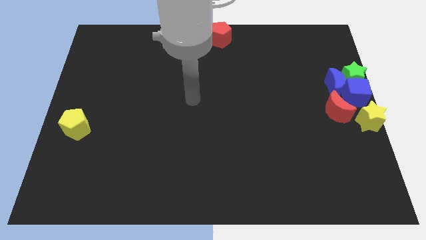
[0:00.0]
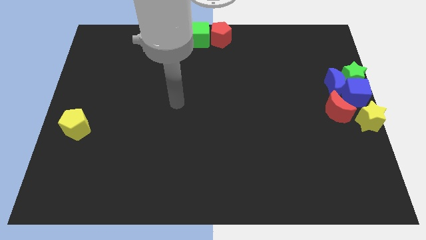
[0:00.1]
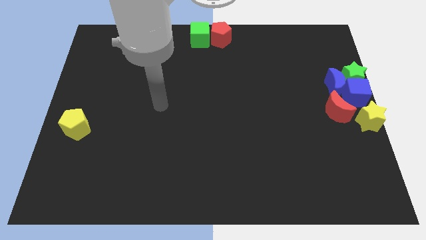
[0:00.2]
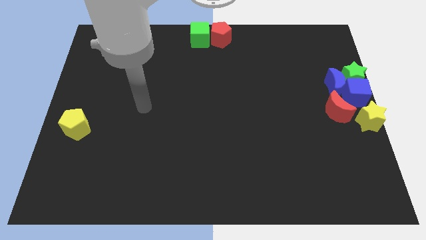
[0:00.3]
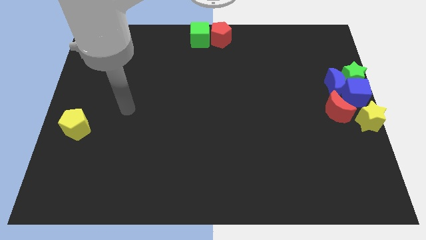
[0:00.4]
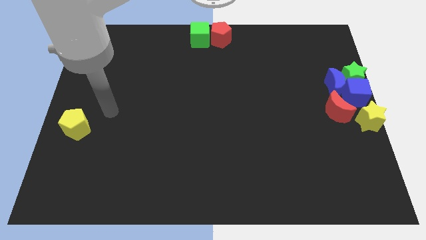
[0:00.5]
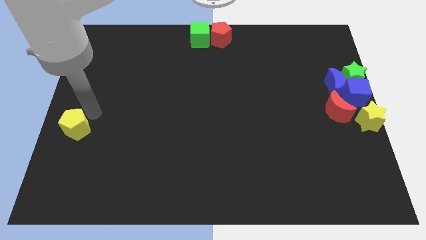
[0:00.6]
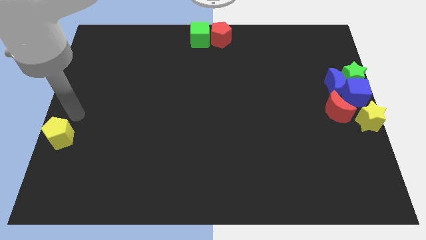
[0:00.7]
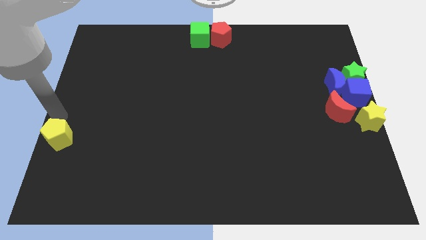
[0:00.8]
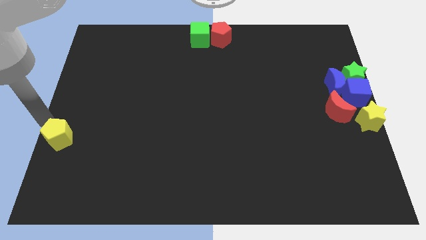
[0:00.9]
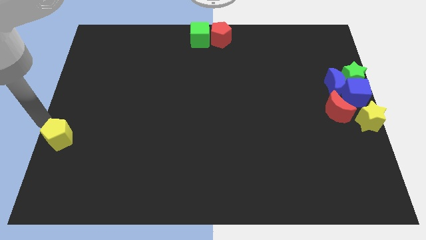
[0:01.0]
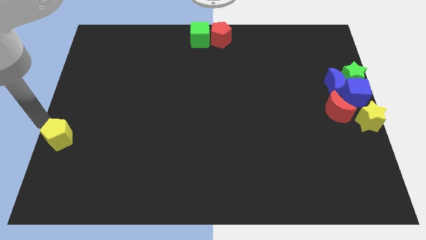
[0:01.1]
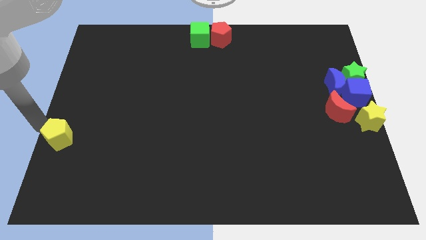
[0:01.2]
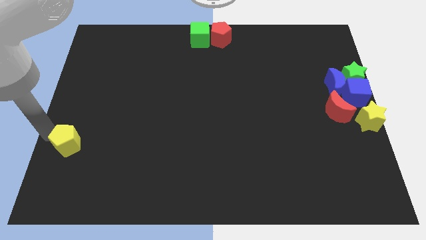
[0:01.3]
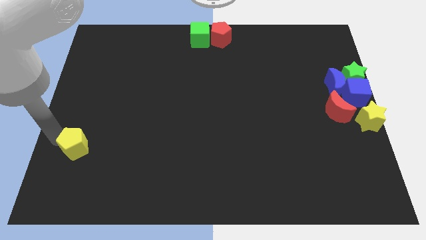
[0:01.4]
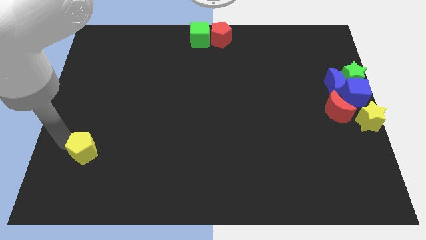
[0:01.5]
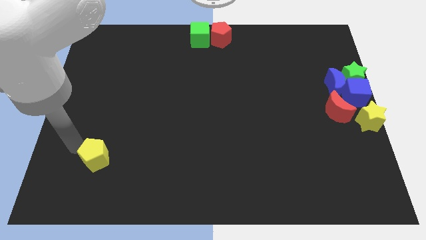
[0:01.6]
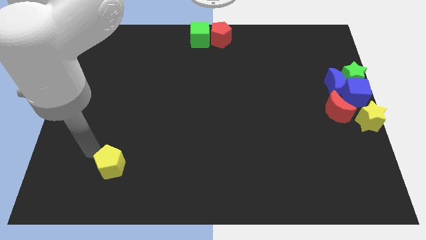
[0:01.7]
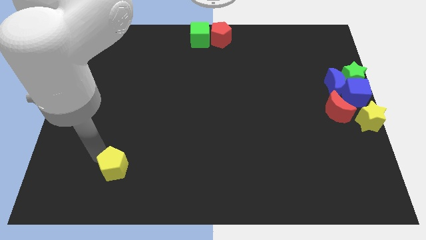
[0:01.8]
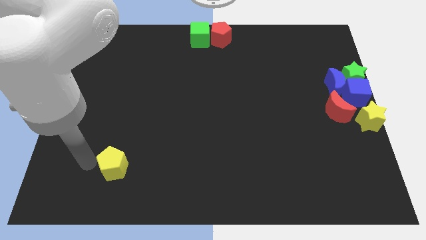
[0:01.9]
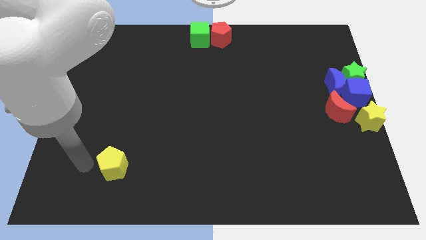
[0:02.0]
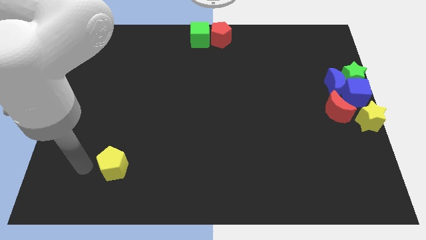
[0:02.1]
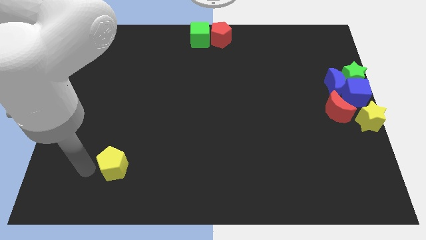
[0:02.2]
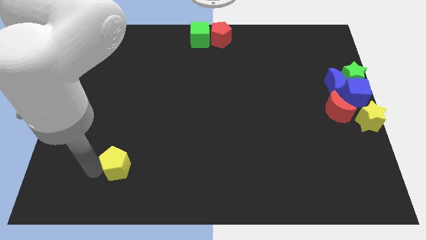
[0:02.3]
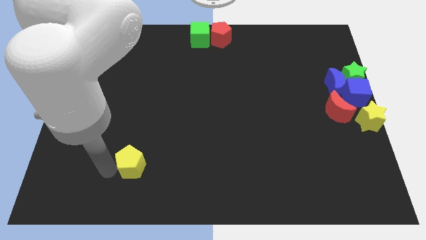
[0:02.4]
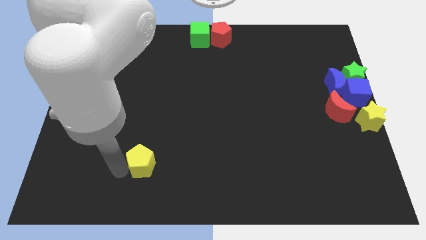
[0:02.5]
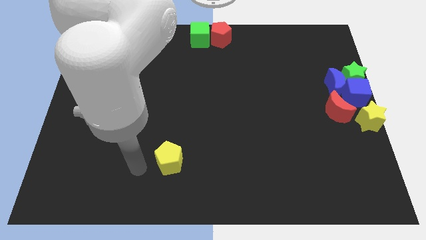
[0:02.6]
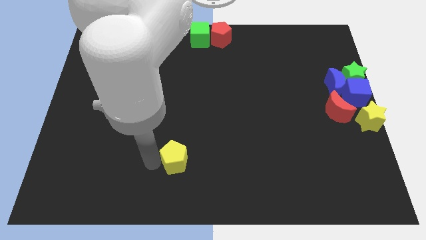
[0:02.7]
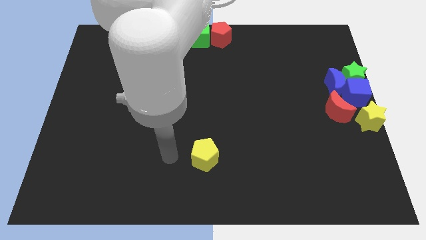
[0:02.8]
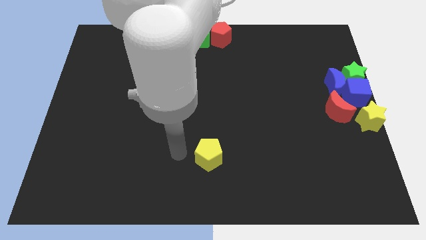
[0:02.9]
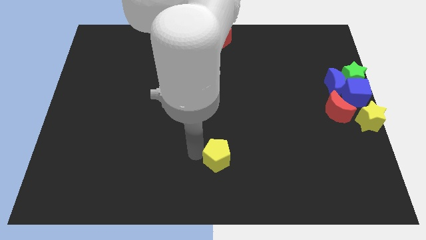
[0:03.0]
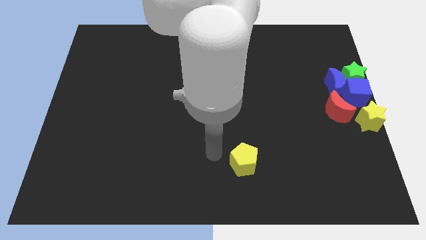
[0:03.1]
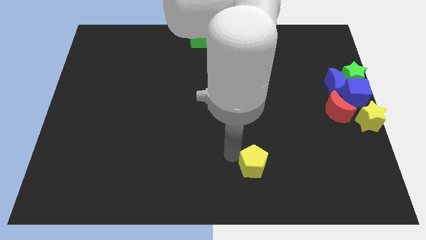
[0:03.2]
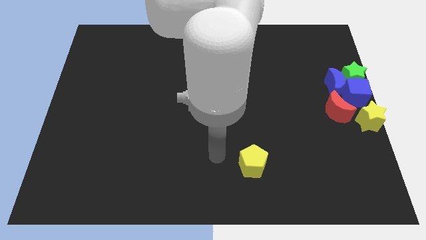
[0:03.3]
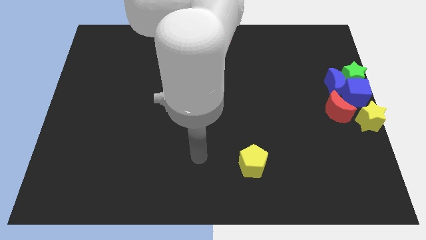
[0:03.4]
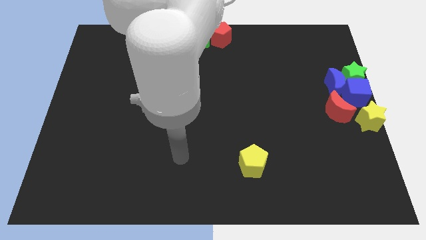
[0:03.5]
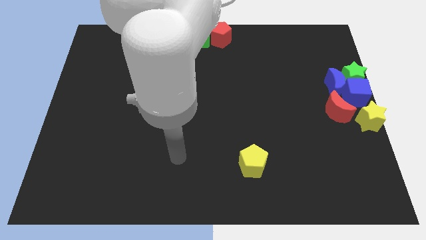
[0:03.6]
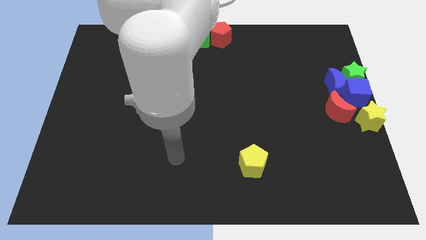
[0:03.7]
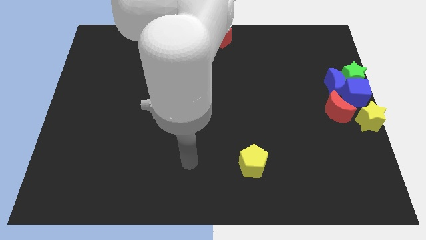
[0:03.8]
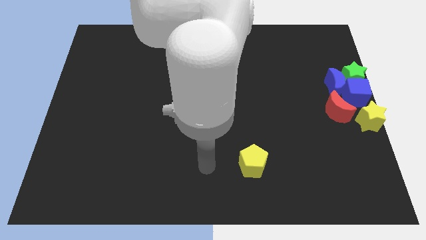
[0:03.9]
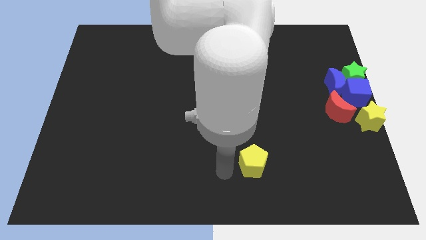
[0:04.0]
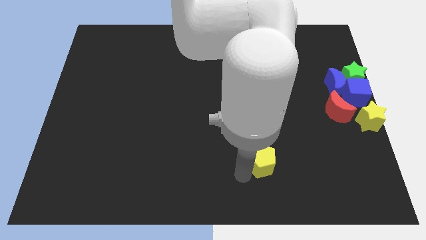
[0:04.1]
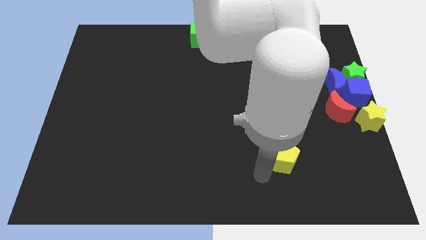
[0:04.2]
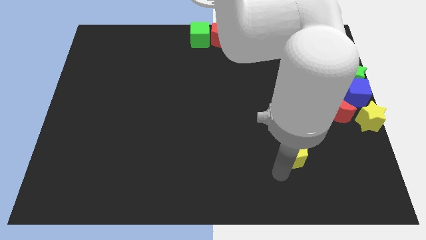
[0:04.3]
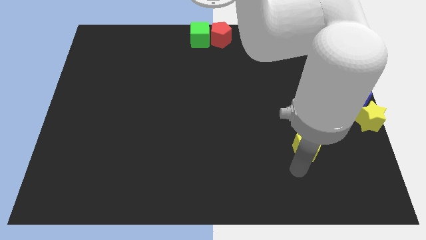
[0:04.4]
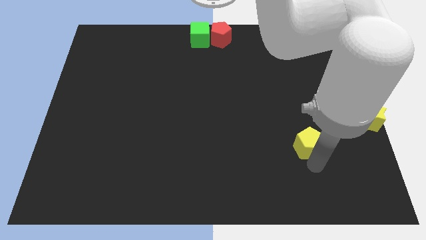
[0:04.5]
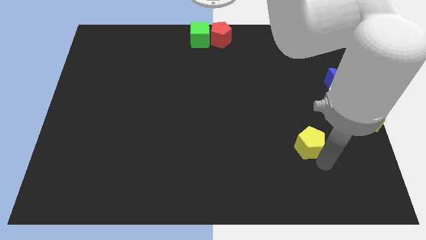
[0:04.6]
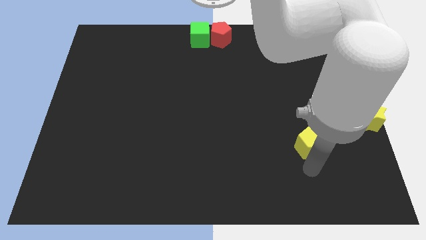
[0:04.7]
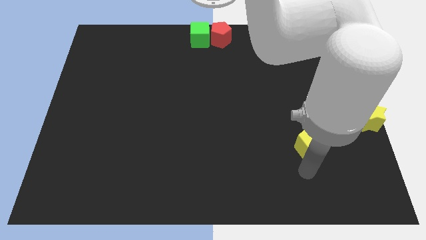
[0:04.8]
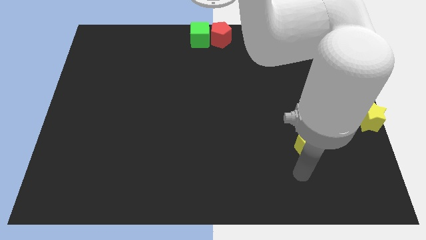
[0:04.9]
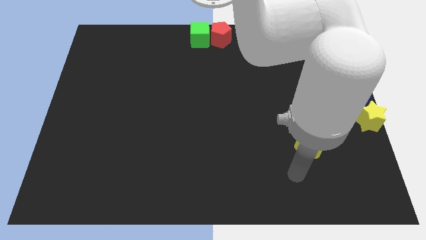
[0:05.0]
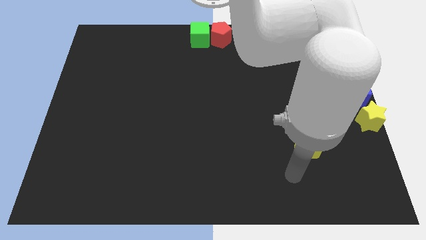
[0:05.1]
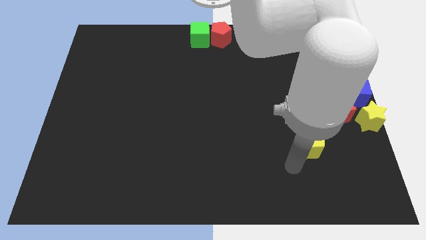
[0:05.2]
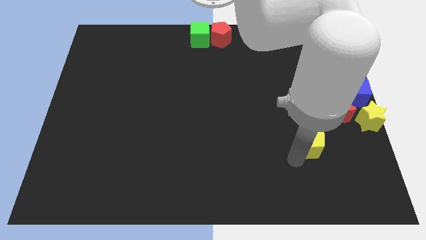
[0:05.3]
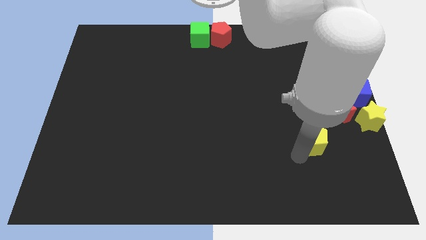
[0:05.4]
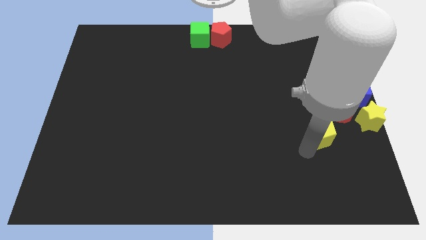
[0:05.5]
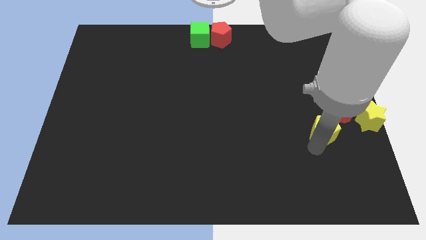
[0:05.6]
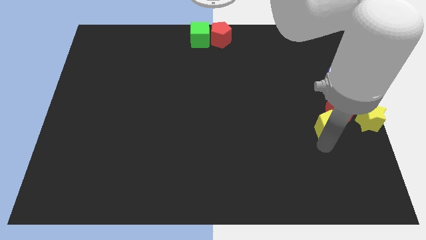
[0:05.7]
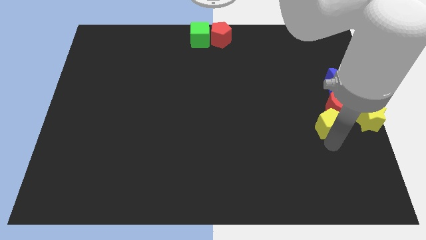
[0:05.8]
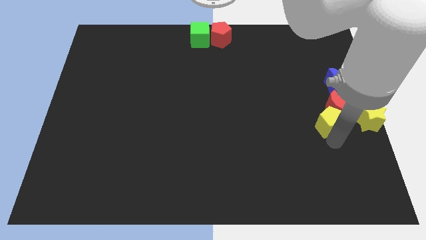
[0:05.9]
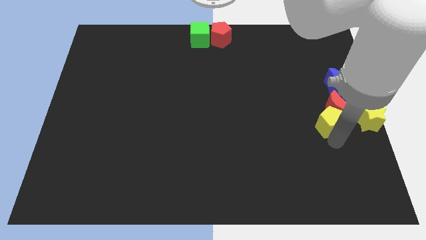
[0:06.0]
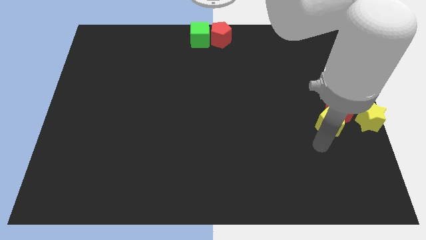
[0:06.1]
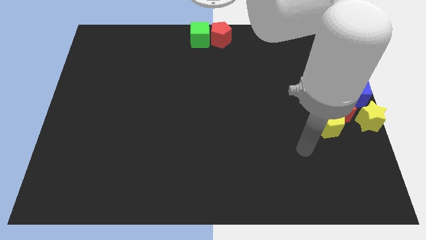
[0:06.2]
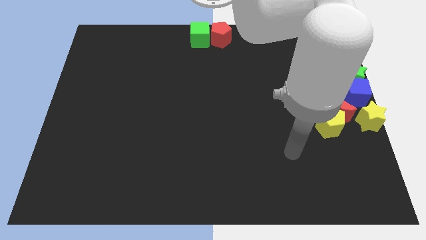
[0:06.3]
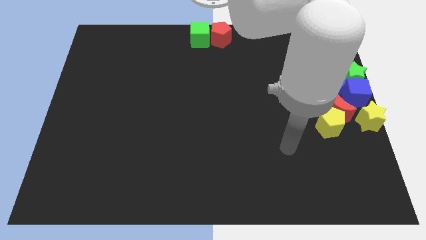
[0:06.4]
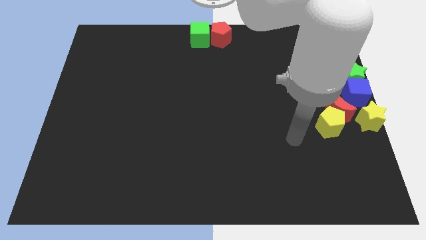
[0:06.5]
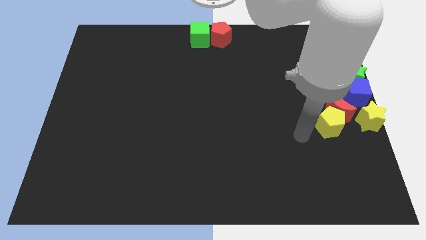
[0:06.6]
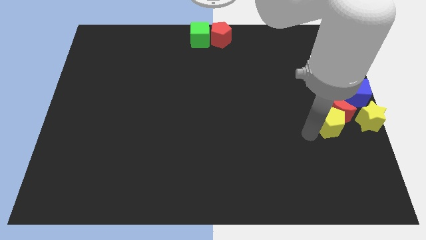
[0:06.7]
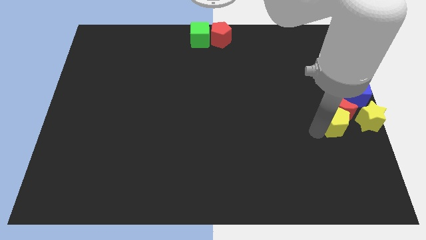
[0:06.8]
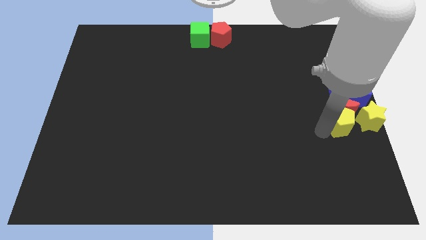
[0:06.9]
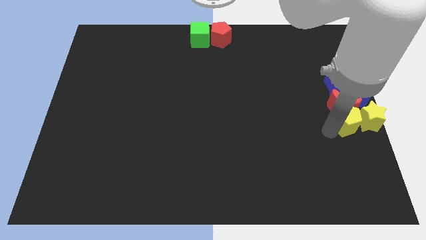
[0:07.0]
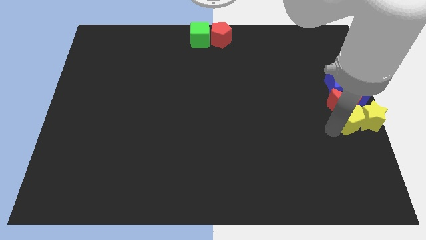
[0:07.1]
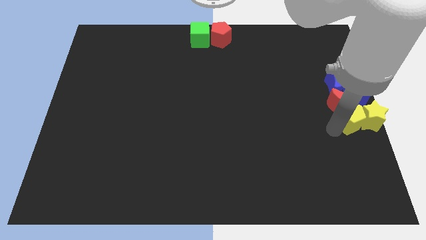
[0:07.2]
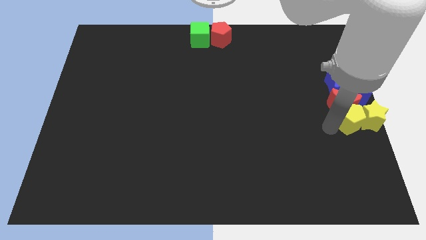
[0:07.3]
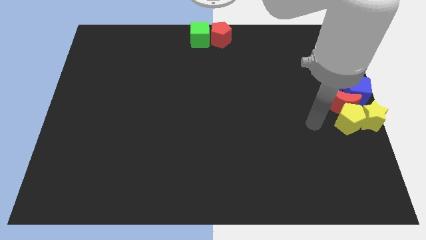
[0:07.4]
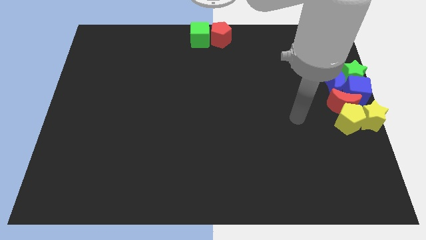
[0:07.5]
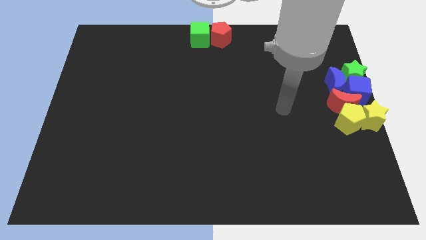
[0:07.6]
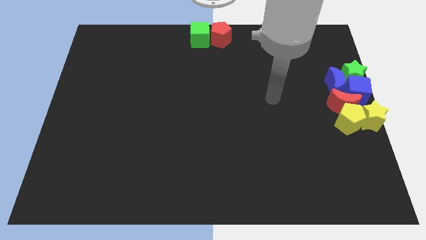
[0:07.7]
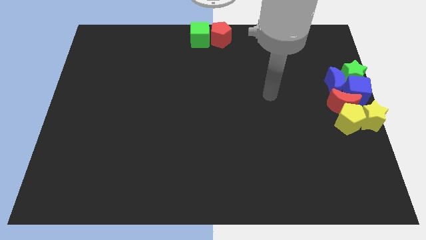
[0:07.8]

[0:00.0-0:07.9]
push the yellow pentagon into the yellow star

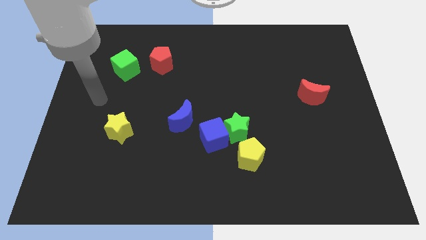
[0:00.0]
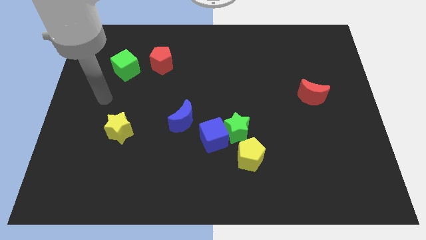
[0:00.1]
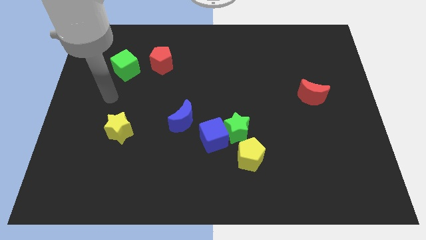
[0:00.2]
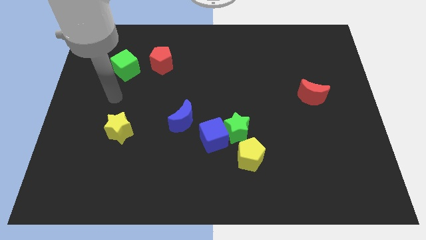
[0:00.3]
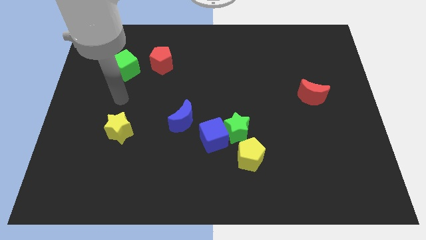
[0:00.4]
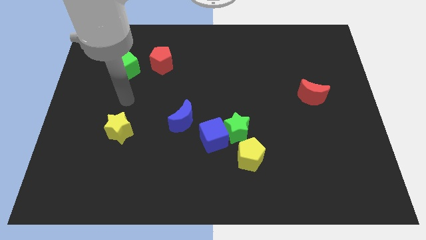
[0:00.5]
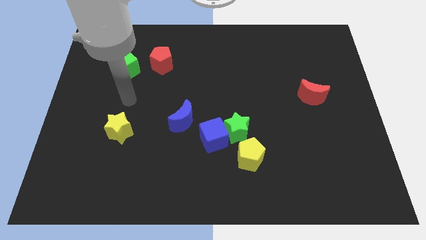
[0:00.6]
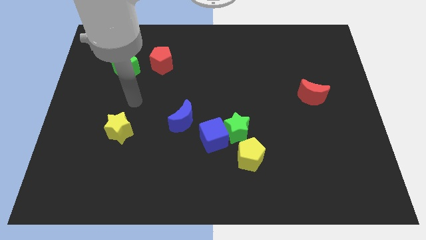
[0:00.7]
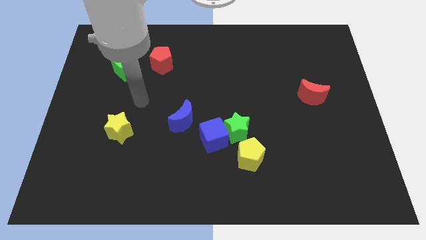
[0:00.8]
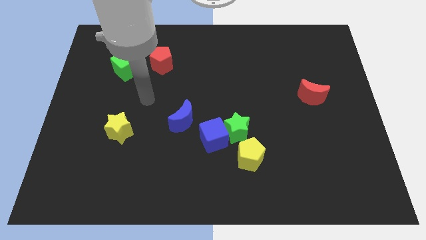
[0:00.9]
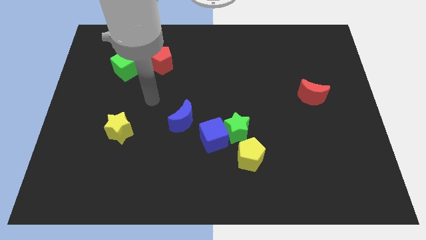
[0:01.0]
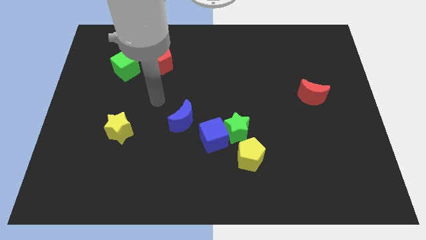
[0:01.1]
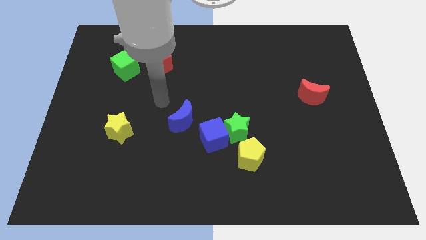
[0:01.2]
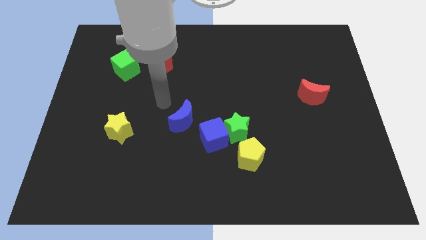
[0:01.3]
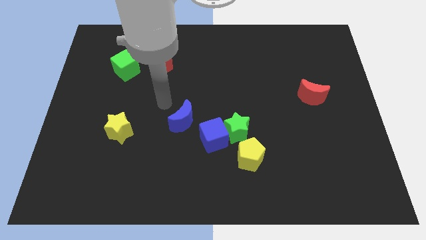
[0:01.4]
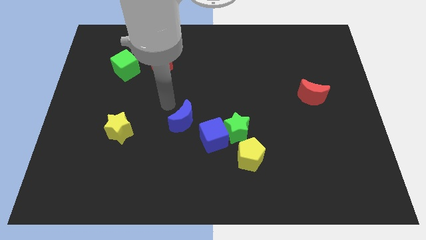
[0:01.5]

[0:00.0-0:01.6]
point your arm at the top of the blue crescent
